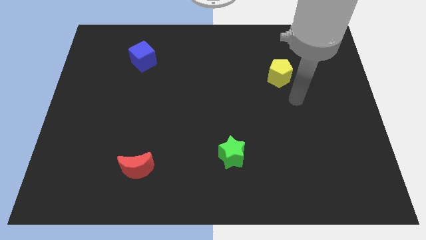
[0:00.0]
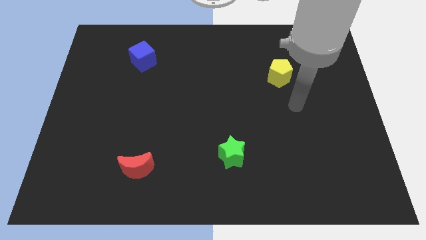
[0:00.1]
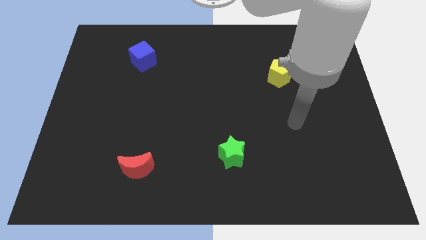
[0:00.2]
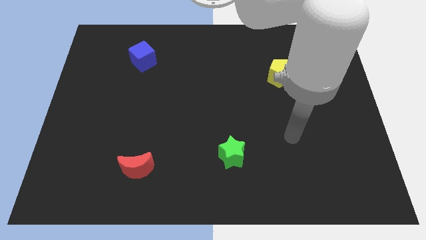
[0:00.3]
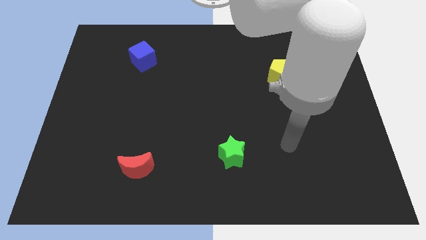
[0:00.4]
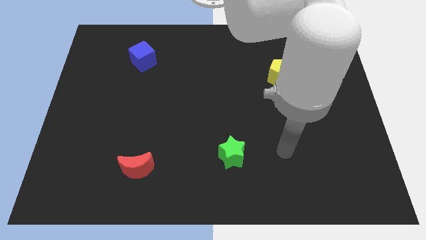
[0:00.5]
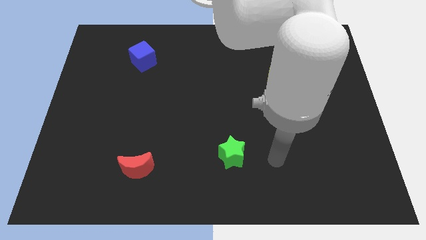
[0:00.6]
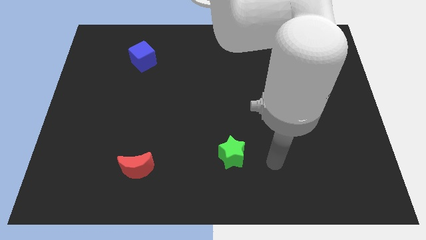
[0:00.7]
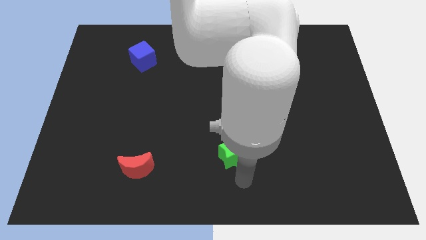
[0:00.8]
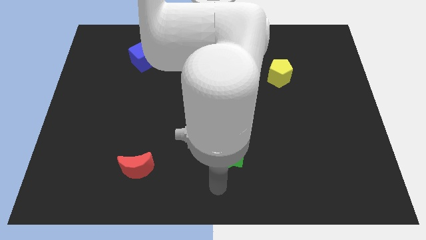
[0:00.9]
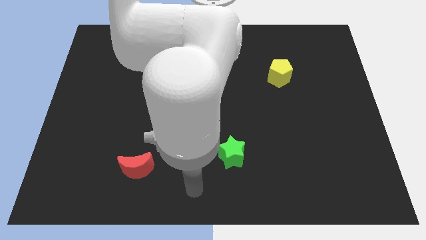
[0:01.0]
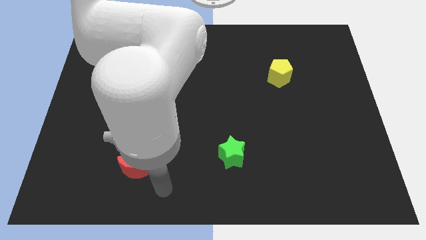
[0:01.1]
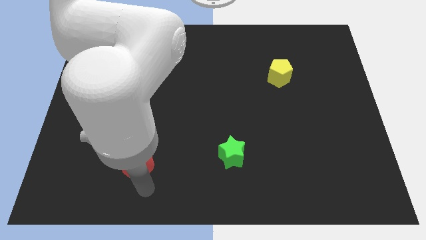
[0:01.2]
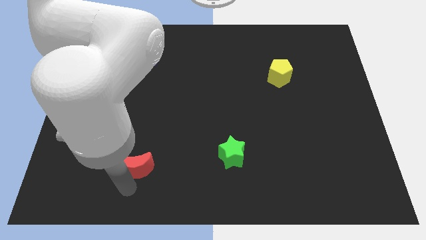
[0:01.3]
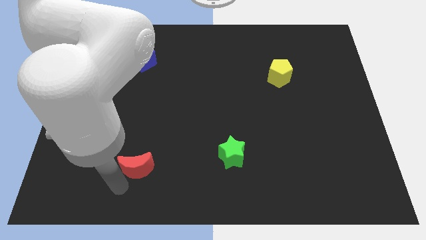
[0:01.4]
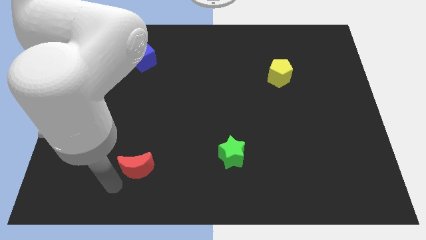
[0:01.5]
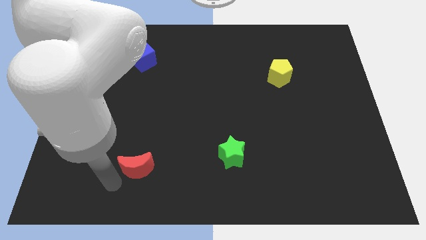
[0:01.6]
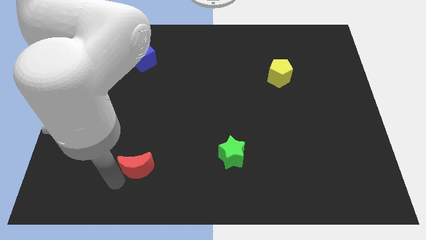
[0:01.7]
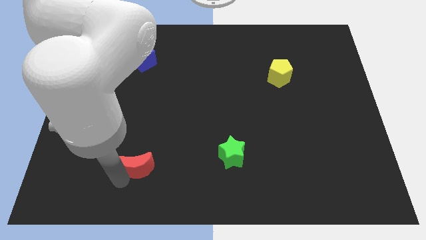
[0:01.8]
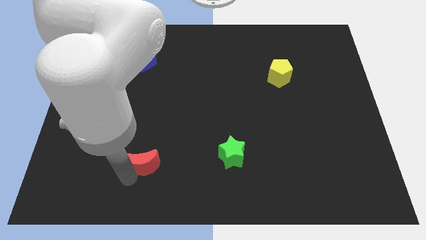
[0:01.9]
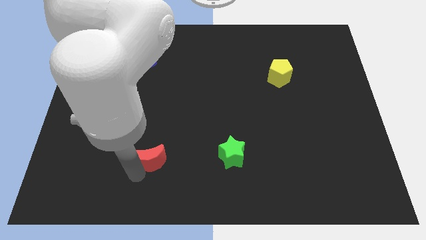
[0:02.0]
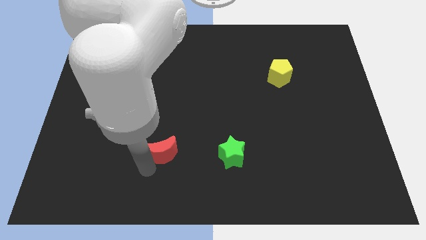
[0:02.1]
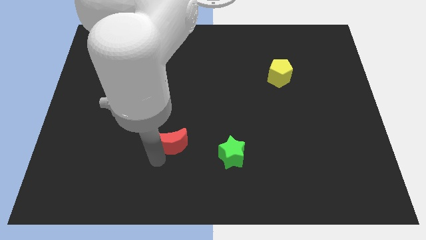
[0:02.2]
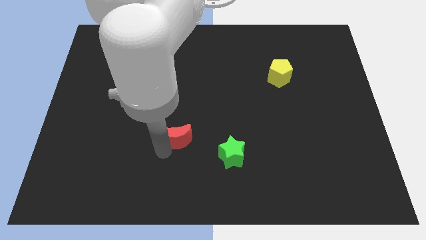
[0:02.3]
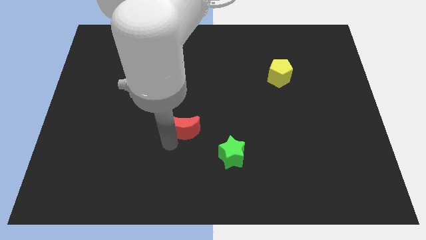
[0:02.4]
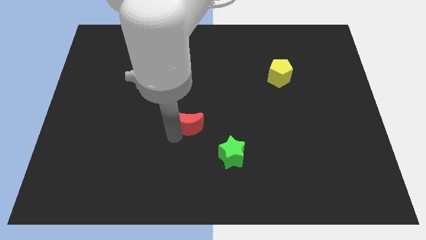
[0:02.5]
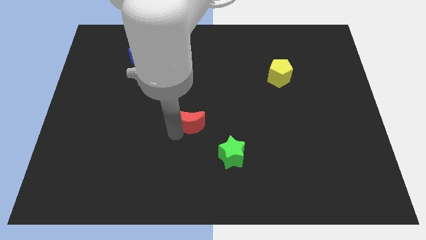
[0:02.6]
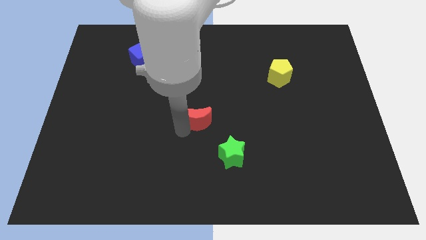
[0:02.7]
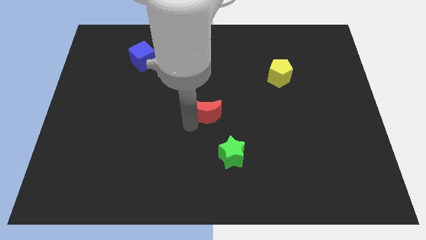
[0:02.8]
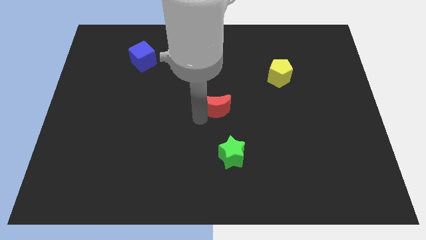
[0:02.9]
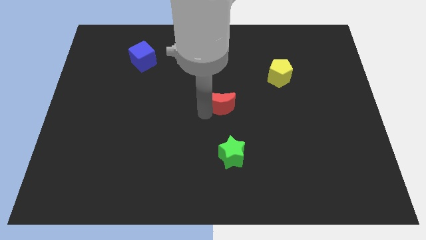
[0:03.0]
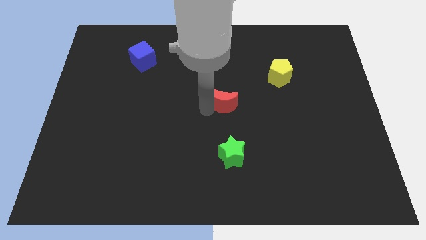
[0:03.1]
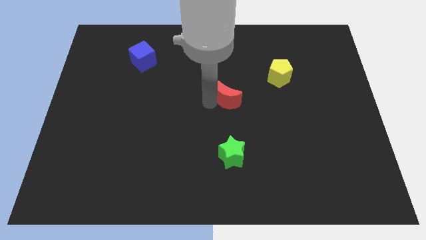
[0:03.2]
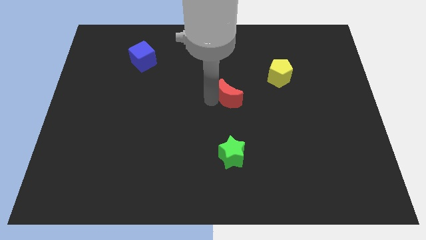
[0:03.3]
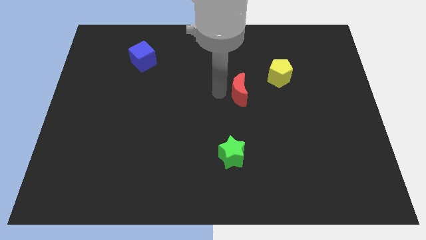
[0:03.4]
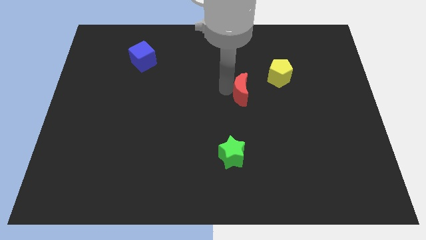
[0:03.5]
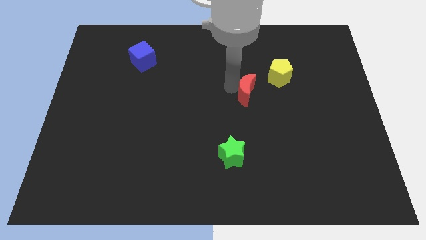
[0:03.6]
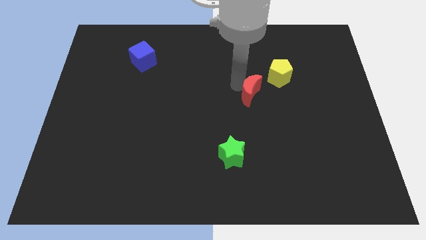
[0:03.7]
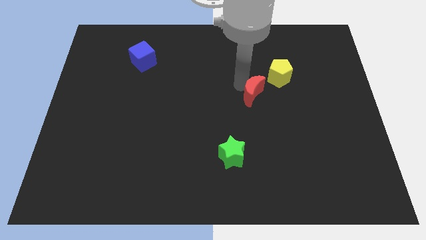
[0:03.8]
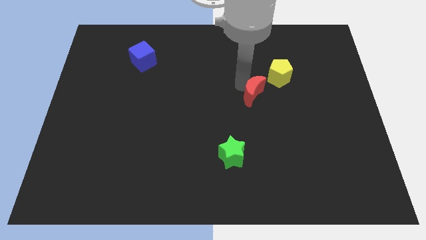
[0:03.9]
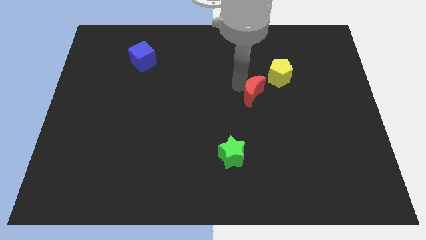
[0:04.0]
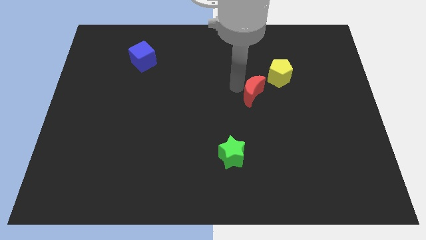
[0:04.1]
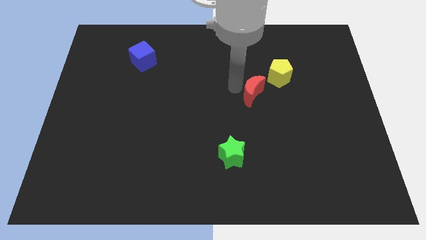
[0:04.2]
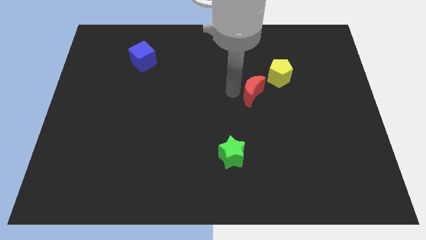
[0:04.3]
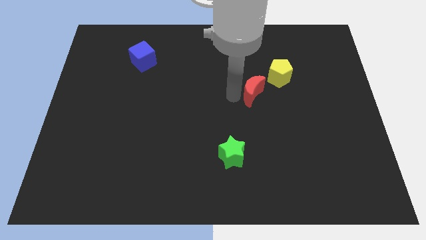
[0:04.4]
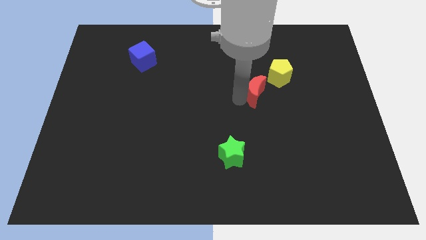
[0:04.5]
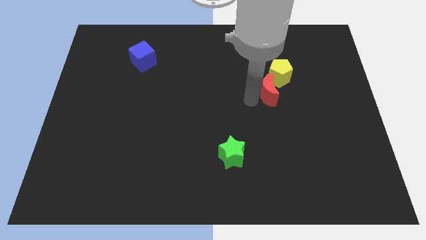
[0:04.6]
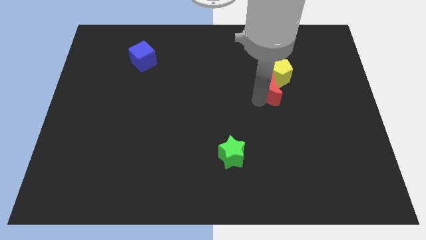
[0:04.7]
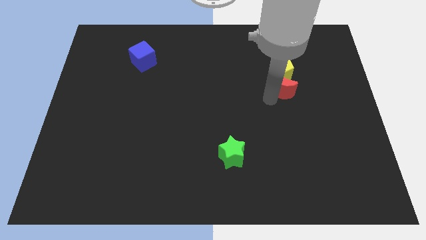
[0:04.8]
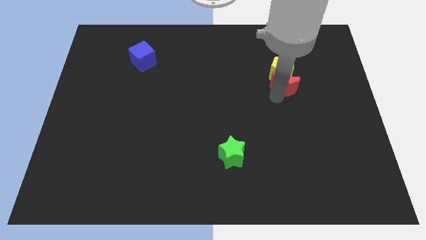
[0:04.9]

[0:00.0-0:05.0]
push the moon next to the pentagon

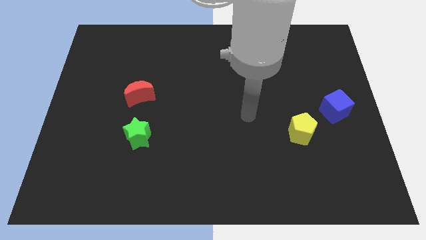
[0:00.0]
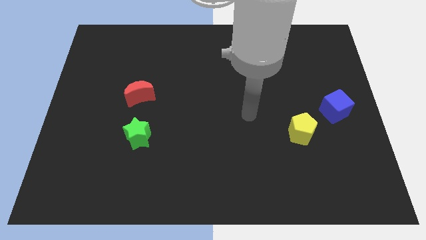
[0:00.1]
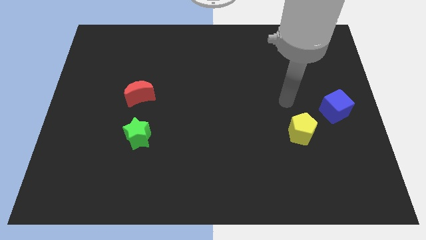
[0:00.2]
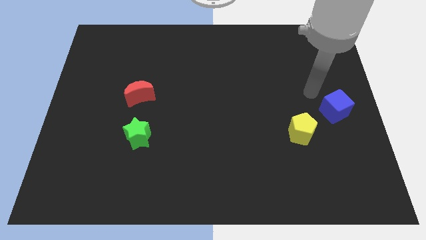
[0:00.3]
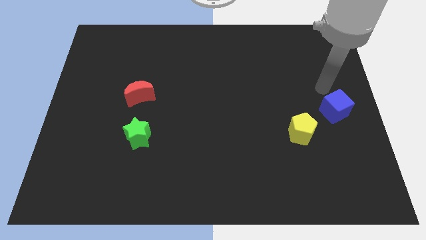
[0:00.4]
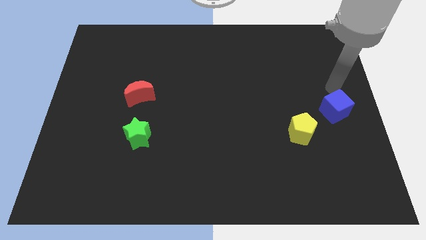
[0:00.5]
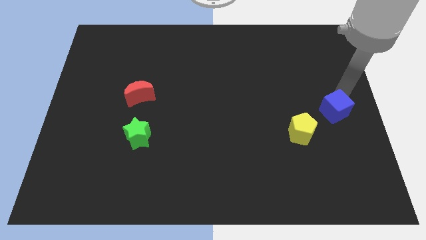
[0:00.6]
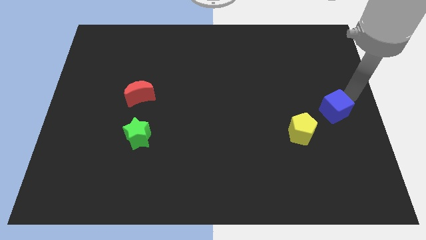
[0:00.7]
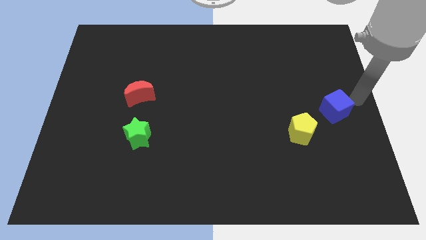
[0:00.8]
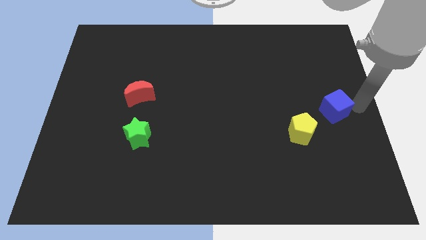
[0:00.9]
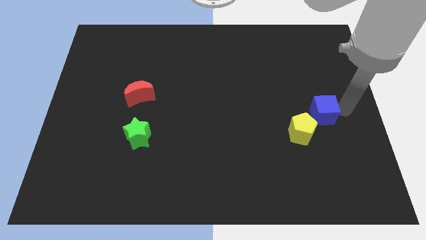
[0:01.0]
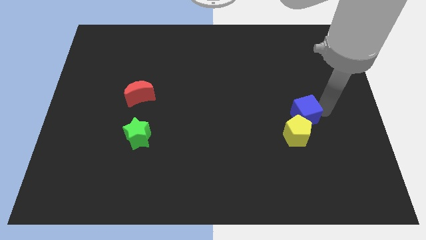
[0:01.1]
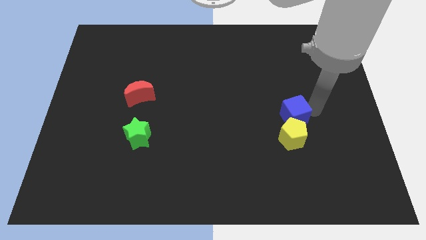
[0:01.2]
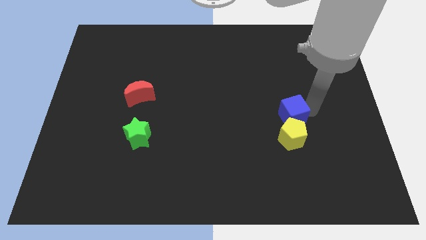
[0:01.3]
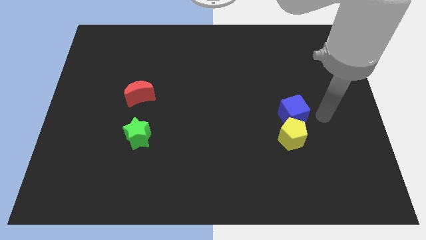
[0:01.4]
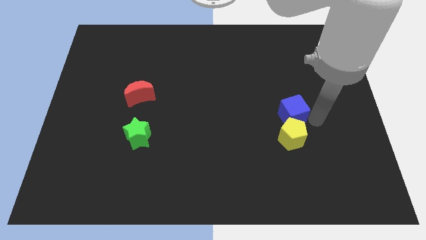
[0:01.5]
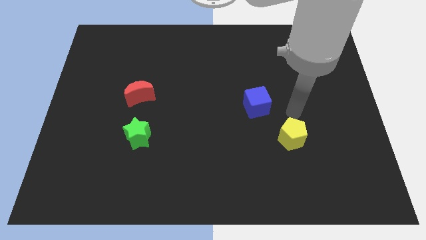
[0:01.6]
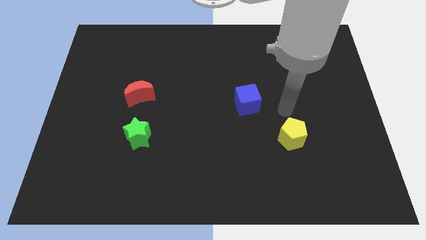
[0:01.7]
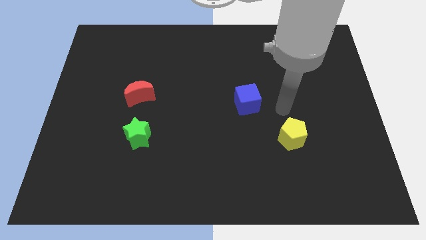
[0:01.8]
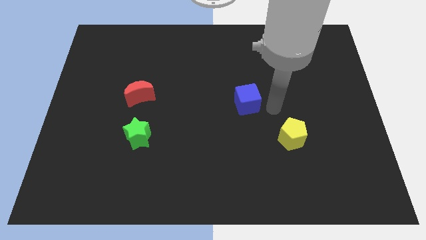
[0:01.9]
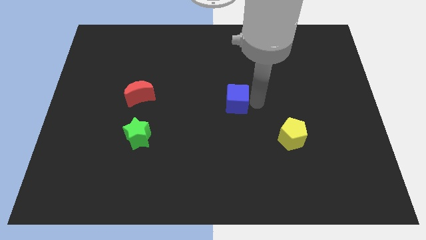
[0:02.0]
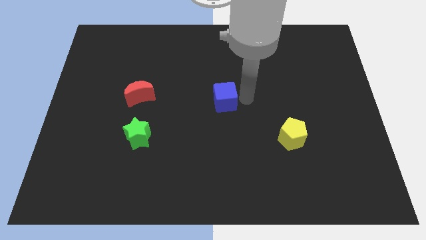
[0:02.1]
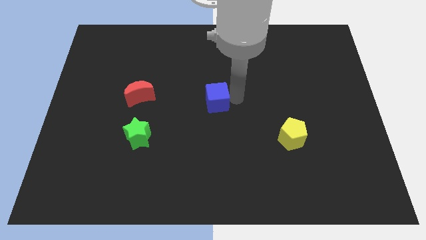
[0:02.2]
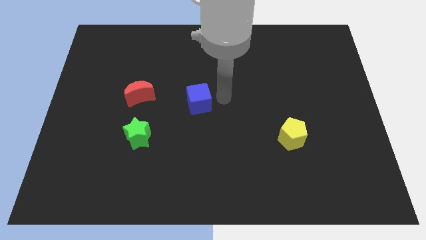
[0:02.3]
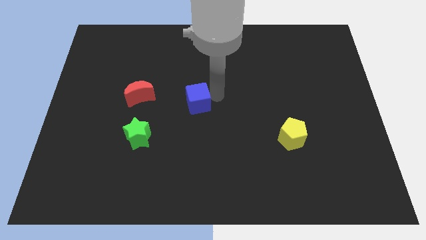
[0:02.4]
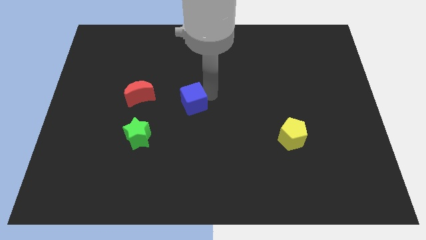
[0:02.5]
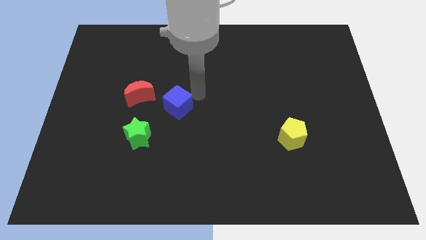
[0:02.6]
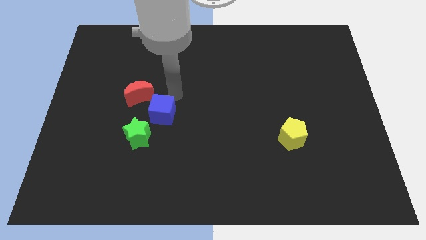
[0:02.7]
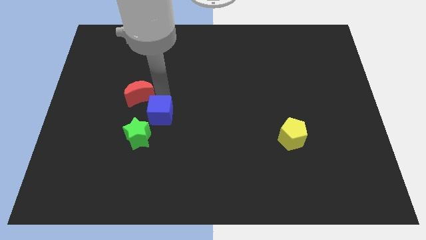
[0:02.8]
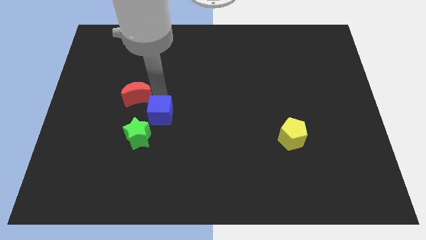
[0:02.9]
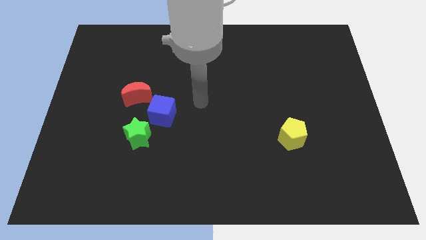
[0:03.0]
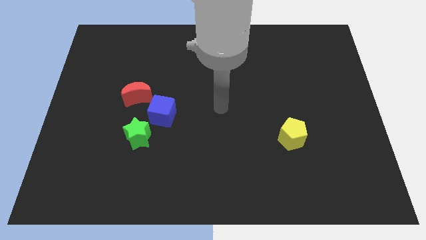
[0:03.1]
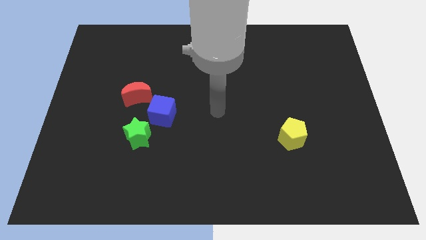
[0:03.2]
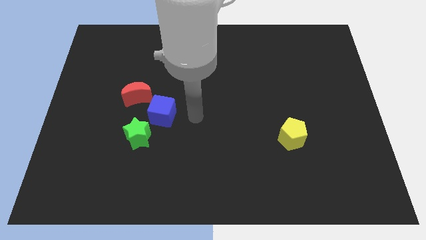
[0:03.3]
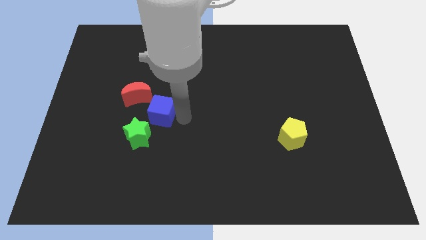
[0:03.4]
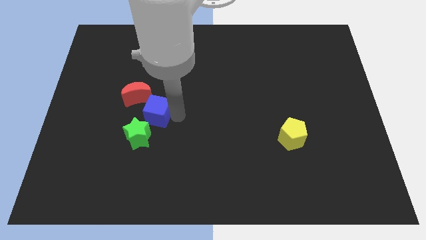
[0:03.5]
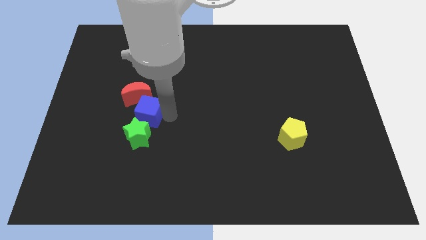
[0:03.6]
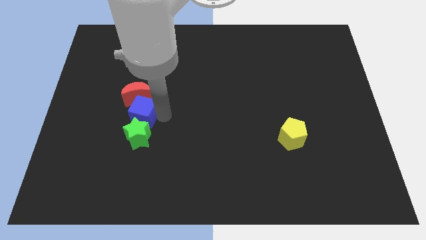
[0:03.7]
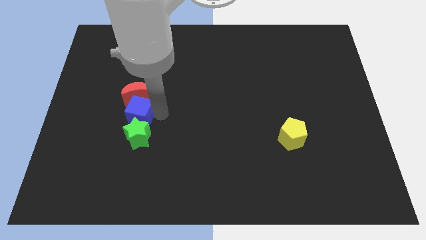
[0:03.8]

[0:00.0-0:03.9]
slide the blue cube close to the moon
